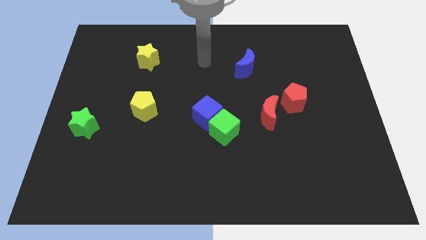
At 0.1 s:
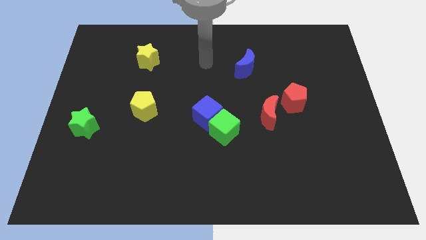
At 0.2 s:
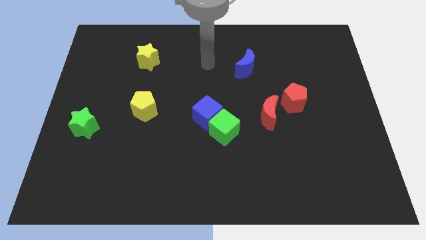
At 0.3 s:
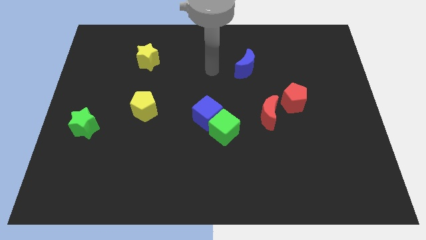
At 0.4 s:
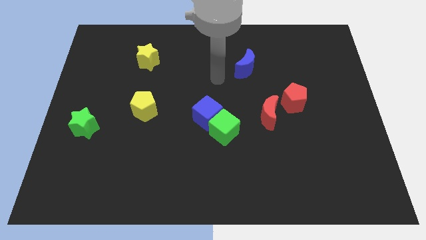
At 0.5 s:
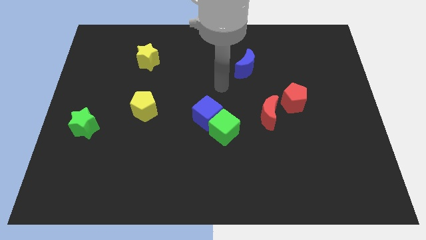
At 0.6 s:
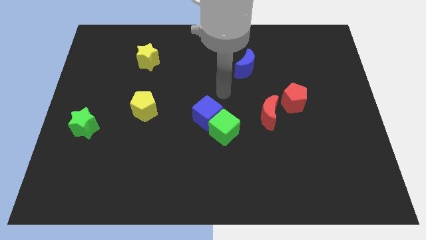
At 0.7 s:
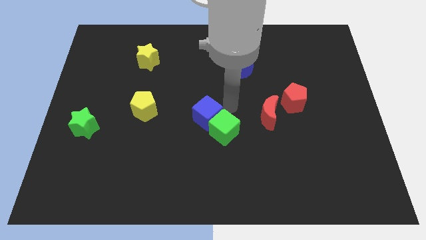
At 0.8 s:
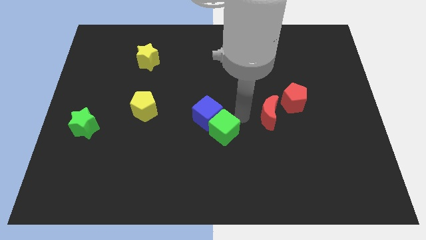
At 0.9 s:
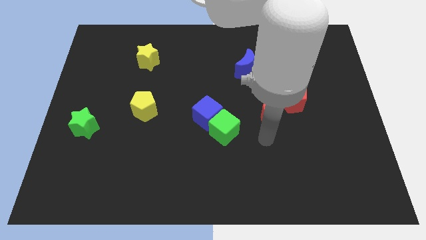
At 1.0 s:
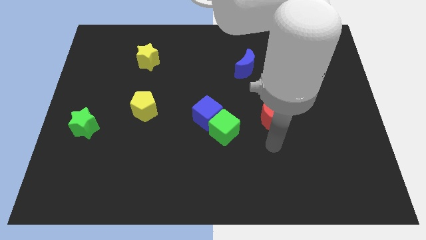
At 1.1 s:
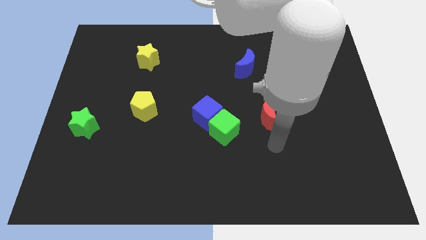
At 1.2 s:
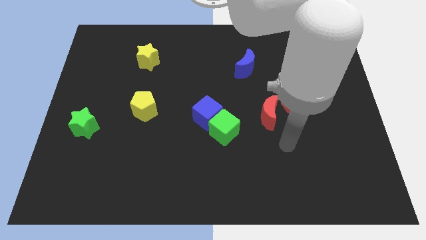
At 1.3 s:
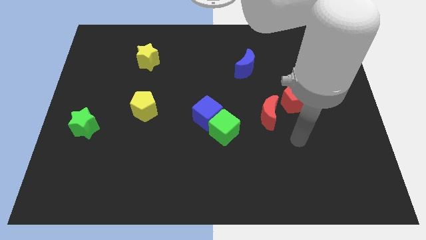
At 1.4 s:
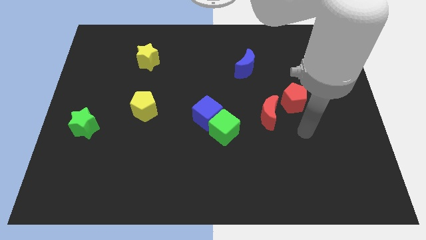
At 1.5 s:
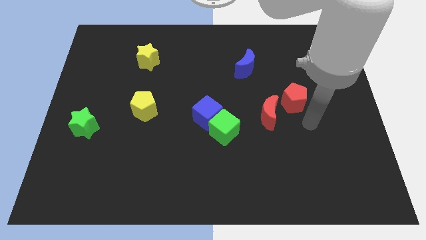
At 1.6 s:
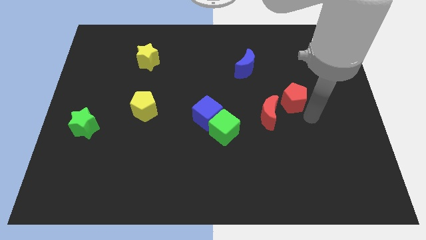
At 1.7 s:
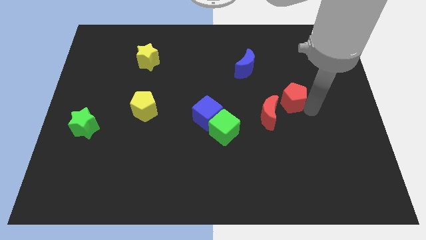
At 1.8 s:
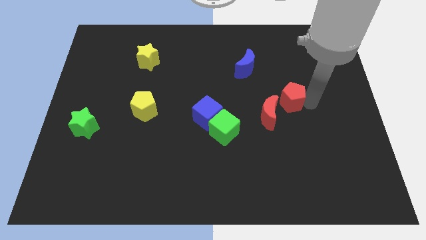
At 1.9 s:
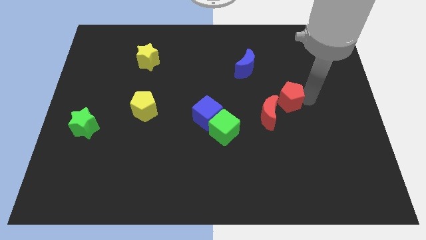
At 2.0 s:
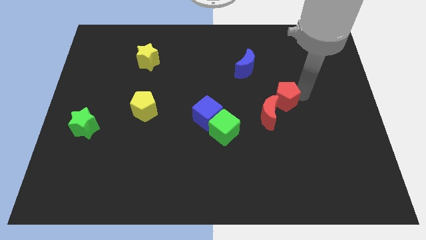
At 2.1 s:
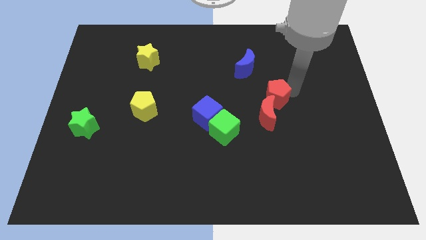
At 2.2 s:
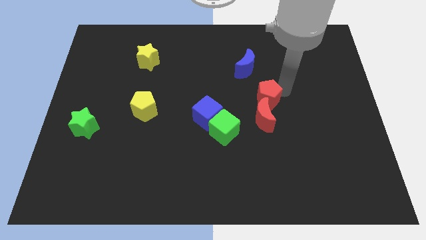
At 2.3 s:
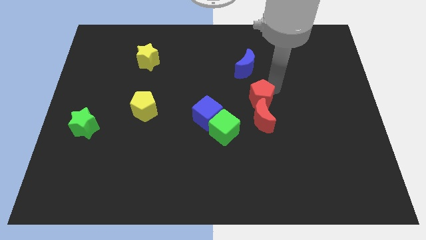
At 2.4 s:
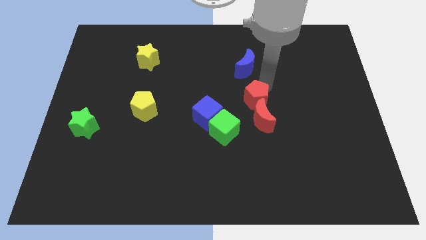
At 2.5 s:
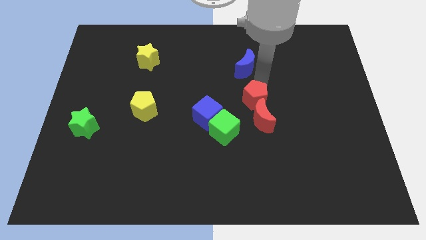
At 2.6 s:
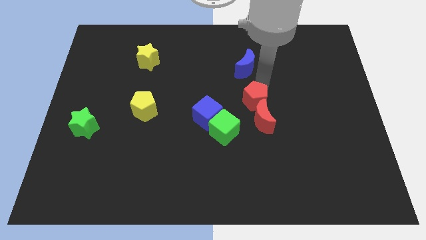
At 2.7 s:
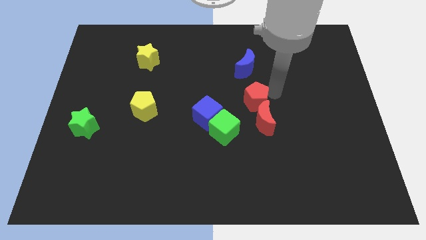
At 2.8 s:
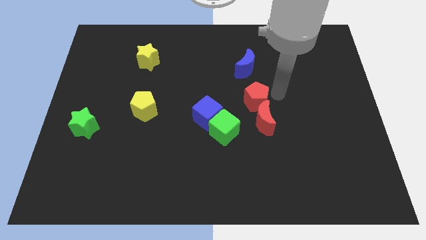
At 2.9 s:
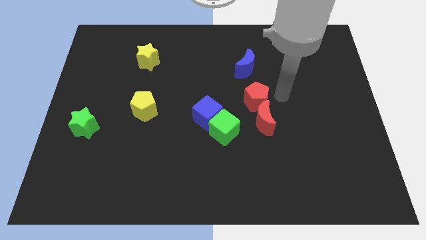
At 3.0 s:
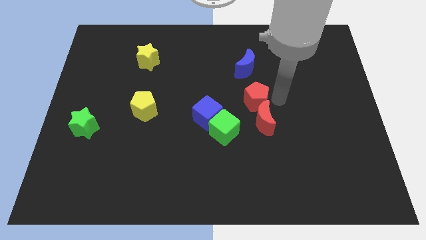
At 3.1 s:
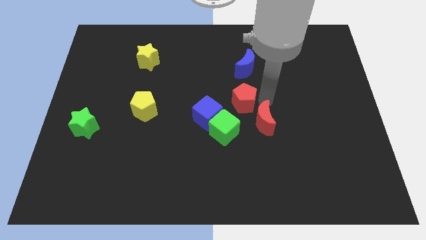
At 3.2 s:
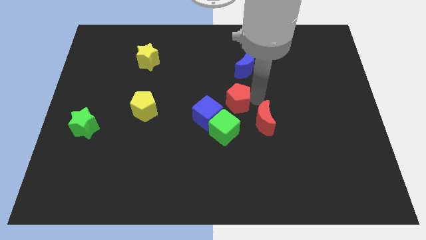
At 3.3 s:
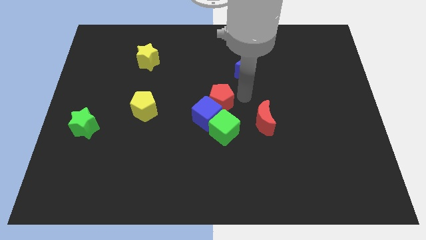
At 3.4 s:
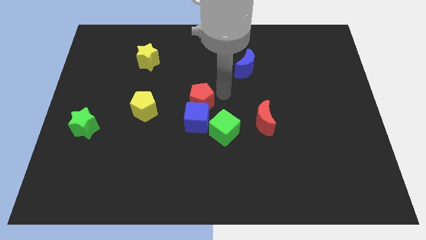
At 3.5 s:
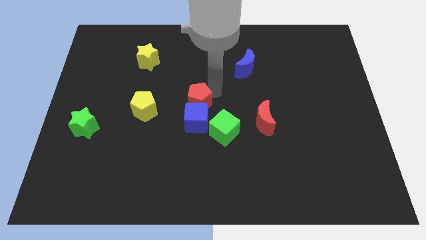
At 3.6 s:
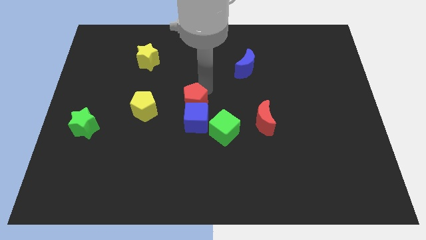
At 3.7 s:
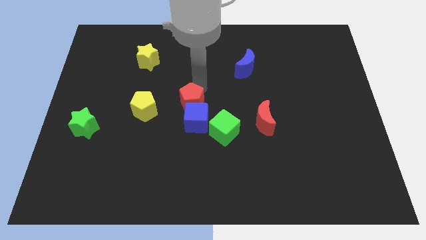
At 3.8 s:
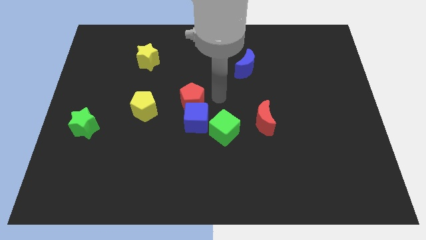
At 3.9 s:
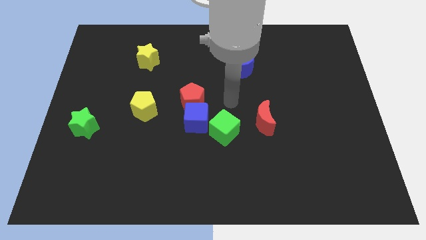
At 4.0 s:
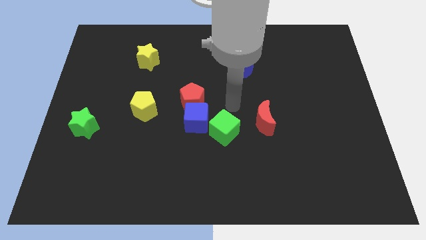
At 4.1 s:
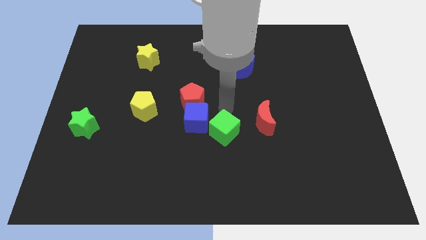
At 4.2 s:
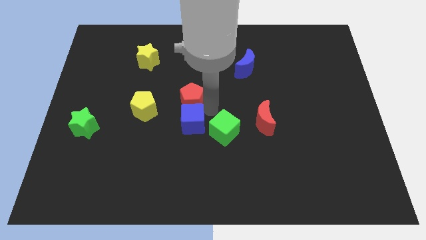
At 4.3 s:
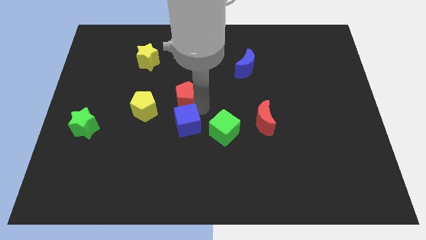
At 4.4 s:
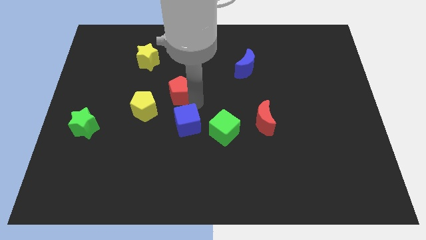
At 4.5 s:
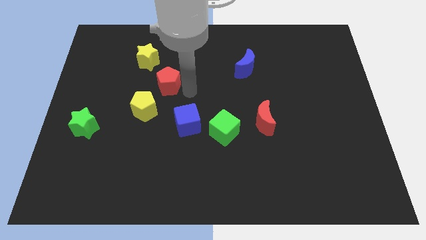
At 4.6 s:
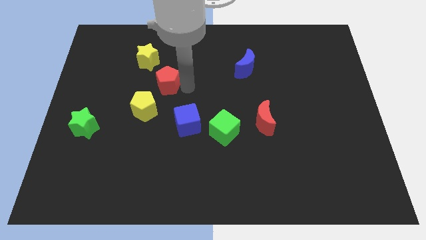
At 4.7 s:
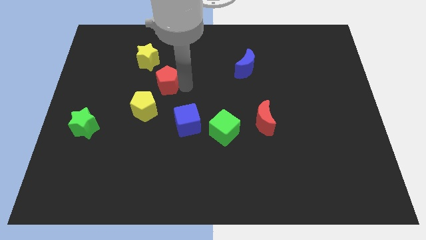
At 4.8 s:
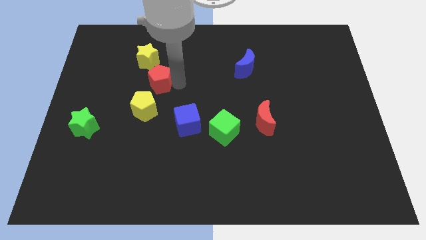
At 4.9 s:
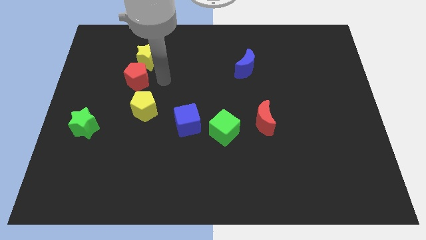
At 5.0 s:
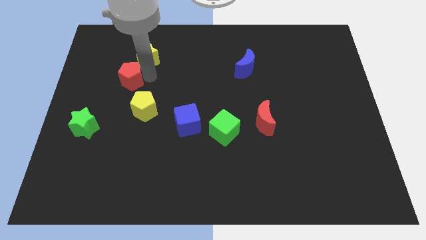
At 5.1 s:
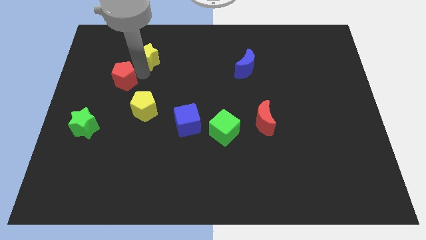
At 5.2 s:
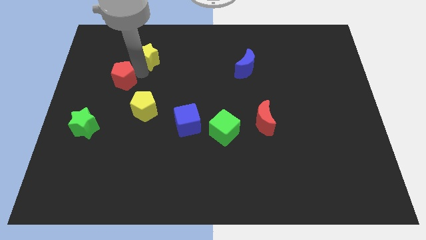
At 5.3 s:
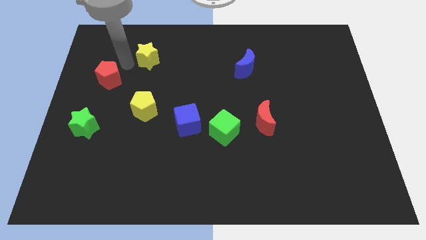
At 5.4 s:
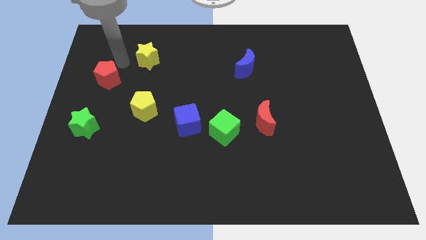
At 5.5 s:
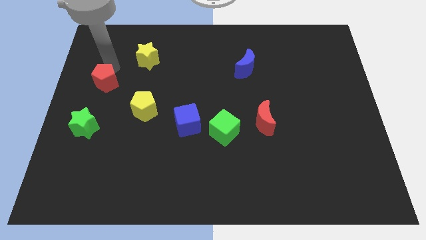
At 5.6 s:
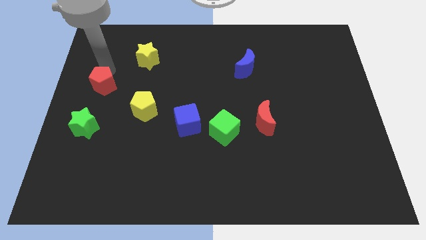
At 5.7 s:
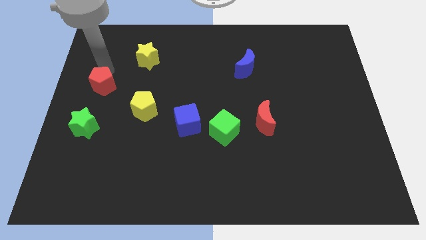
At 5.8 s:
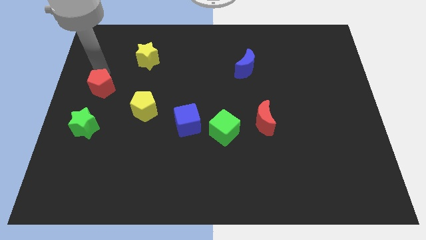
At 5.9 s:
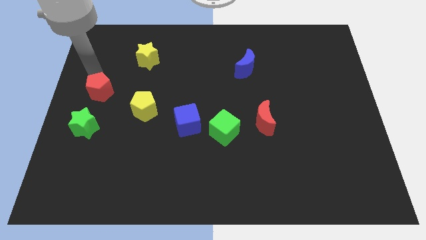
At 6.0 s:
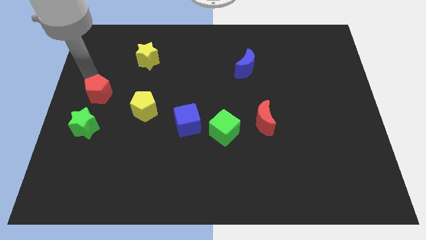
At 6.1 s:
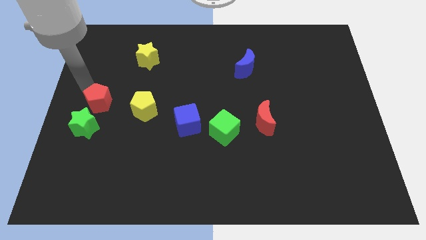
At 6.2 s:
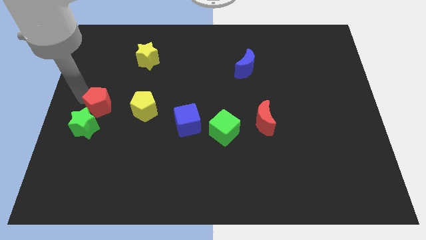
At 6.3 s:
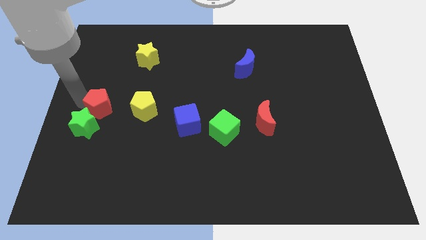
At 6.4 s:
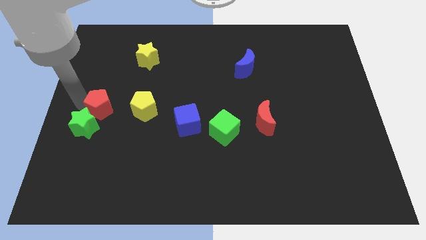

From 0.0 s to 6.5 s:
move the red pentagon towards the green star

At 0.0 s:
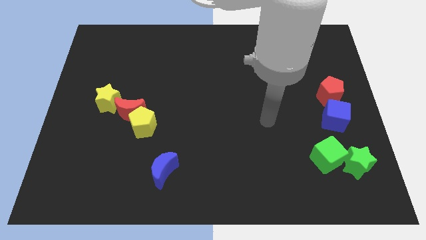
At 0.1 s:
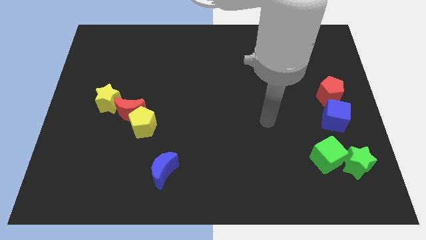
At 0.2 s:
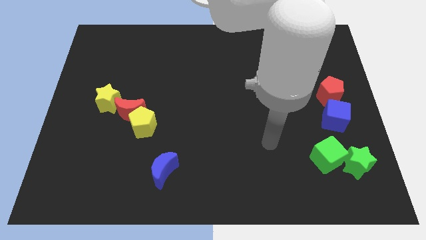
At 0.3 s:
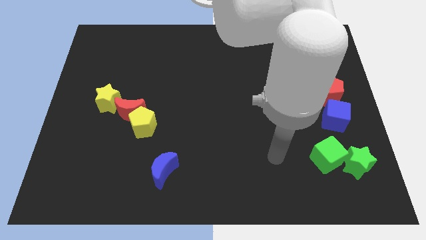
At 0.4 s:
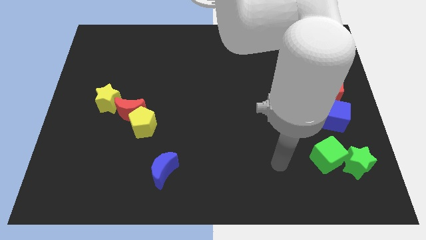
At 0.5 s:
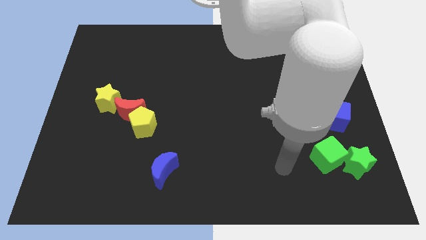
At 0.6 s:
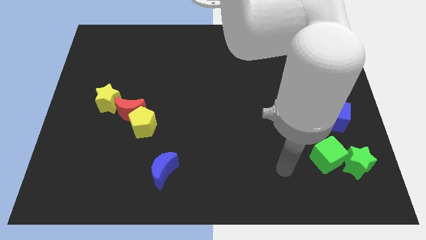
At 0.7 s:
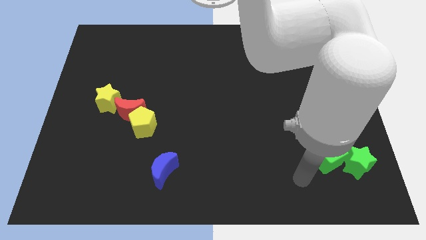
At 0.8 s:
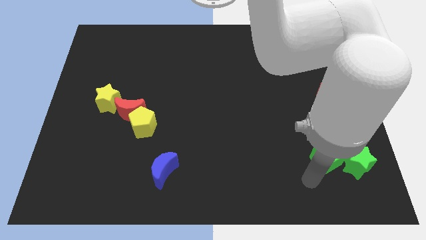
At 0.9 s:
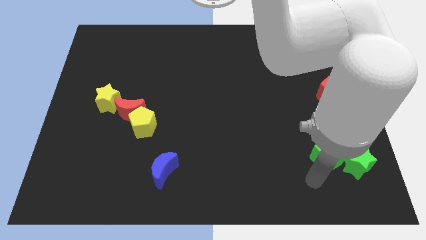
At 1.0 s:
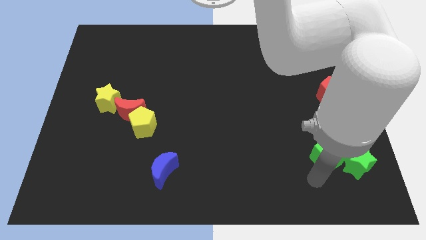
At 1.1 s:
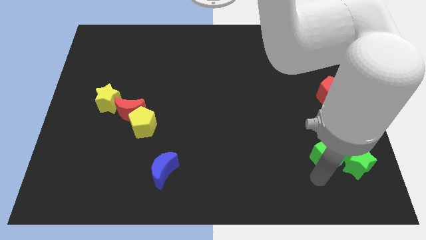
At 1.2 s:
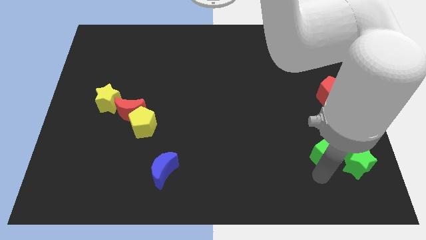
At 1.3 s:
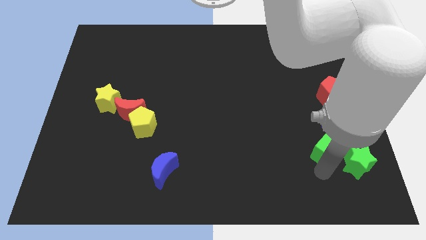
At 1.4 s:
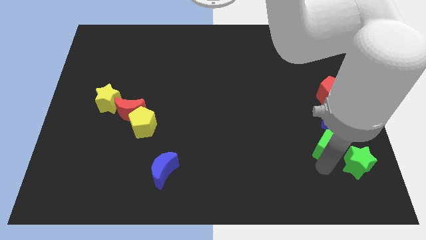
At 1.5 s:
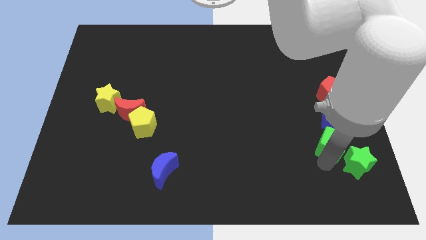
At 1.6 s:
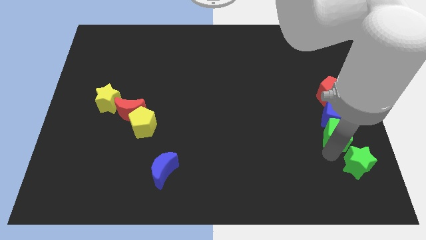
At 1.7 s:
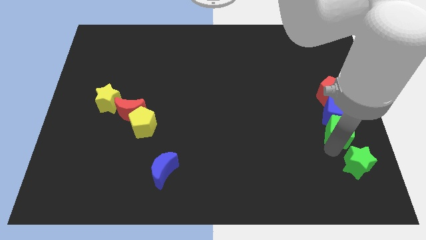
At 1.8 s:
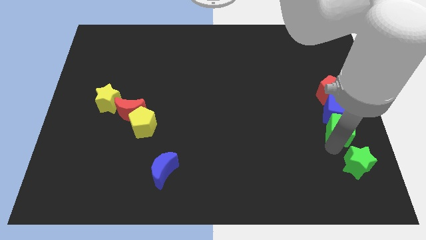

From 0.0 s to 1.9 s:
slide the green cube towards the blue cube
